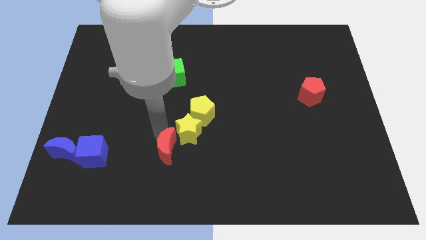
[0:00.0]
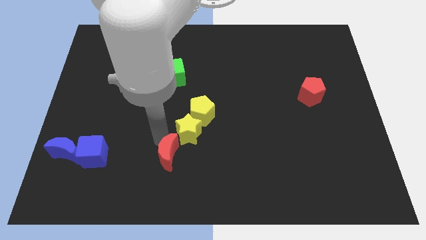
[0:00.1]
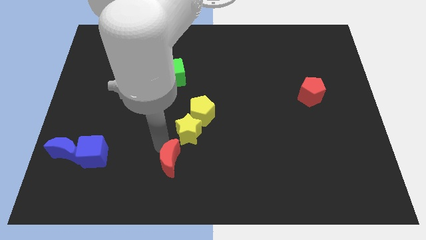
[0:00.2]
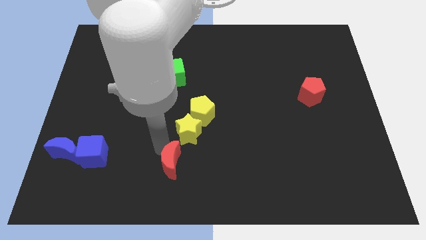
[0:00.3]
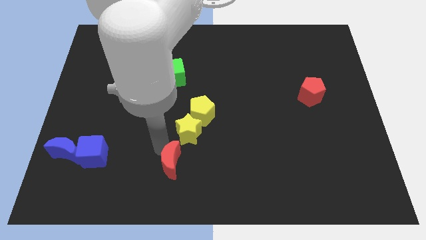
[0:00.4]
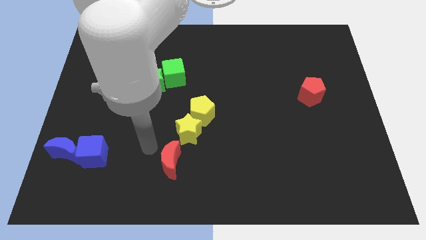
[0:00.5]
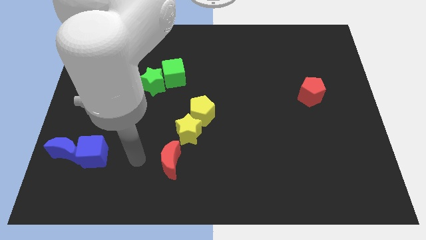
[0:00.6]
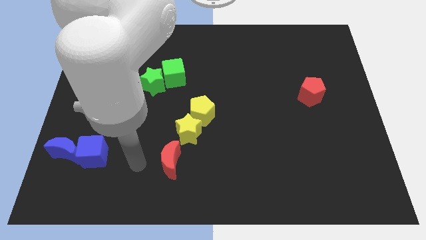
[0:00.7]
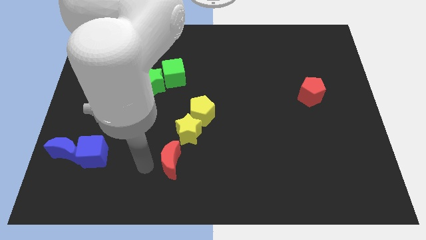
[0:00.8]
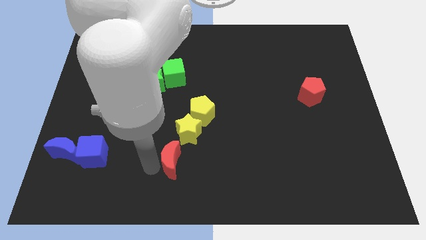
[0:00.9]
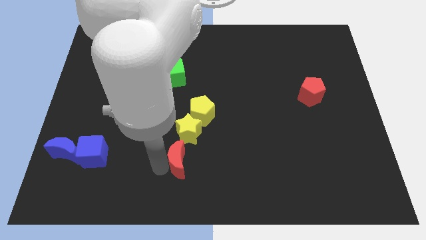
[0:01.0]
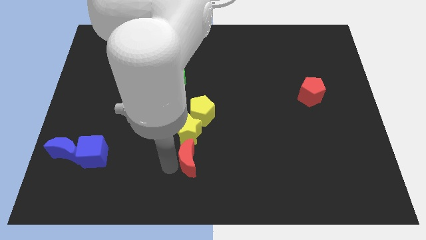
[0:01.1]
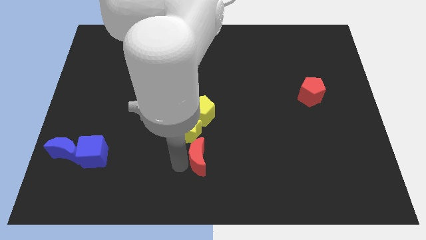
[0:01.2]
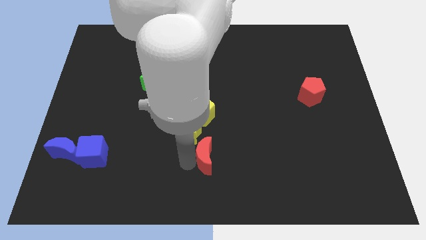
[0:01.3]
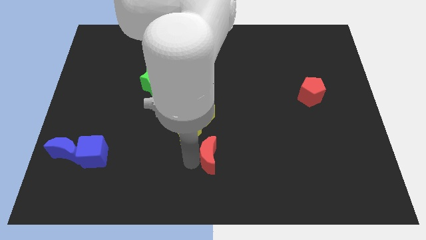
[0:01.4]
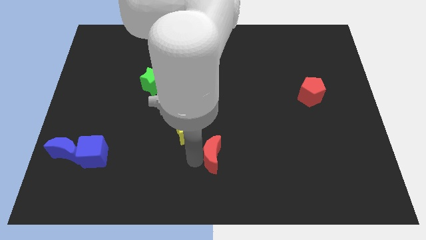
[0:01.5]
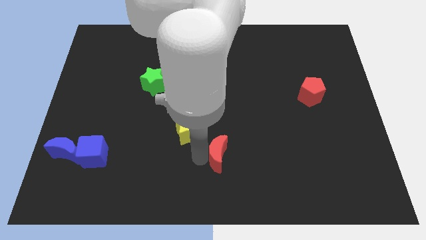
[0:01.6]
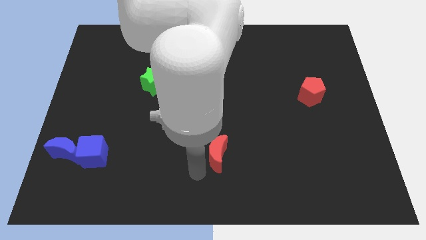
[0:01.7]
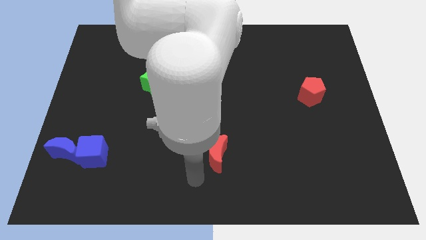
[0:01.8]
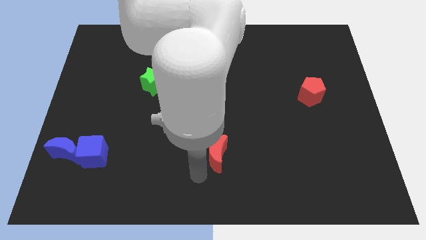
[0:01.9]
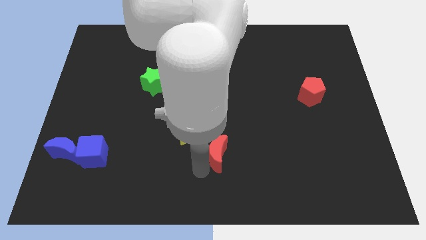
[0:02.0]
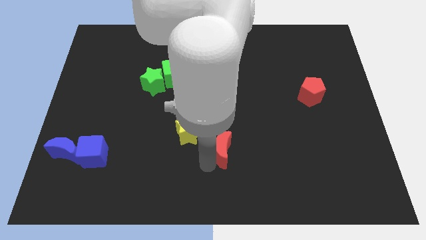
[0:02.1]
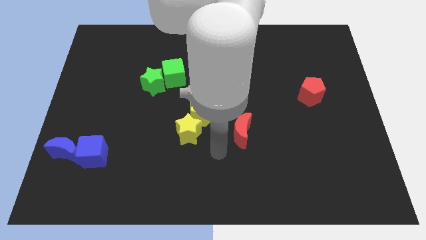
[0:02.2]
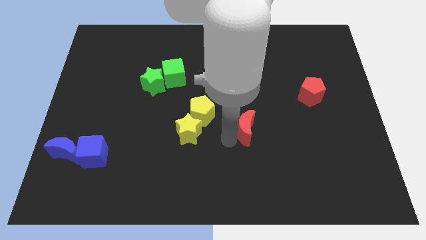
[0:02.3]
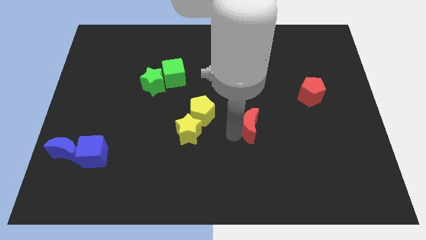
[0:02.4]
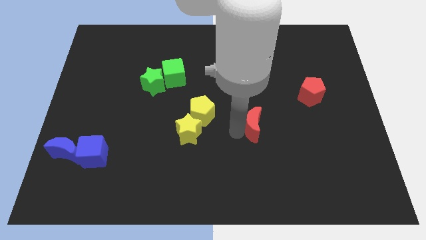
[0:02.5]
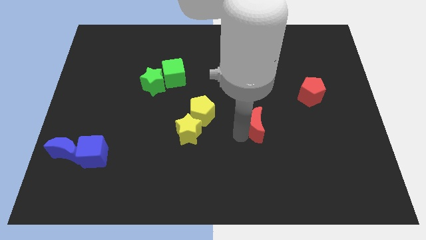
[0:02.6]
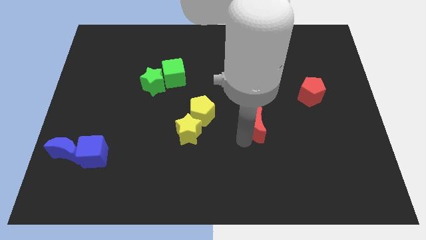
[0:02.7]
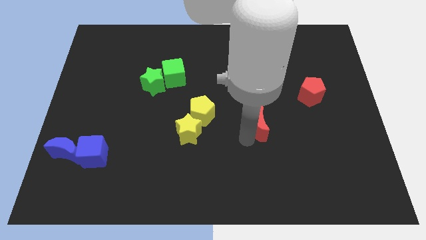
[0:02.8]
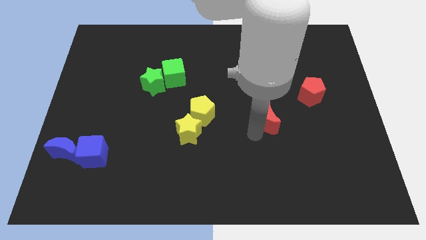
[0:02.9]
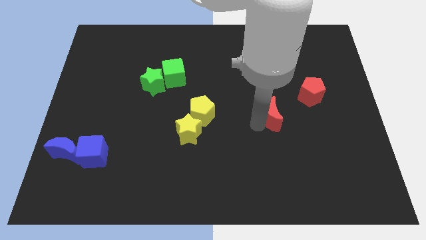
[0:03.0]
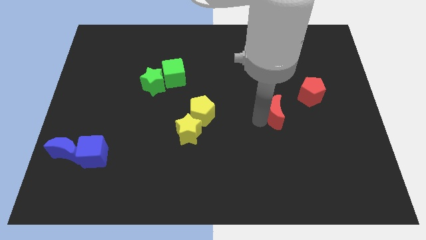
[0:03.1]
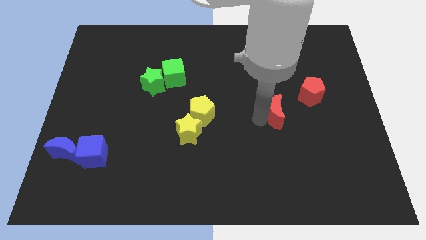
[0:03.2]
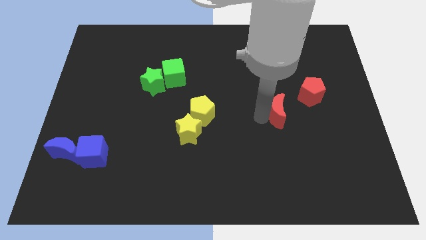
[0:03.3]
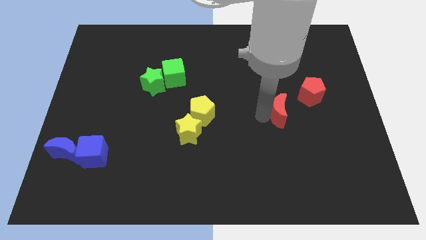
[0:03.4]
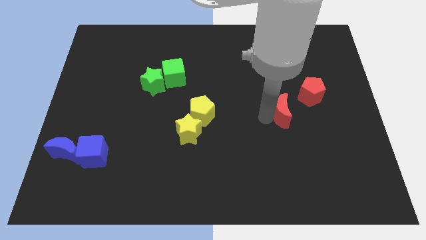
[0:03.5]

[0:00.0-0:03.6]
move the red moon towards the red pentagon

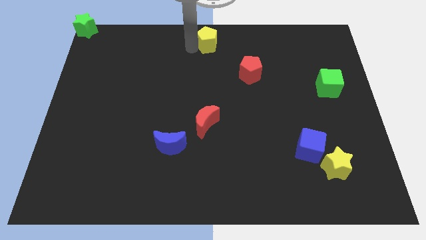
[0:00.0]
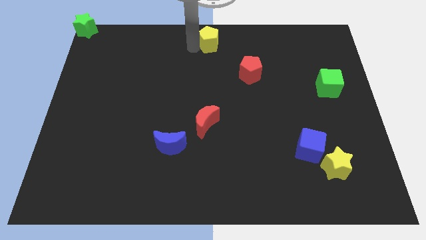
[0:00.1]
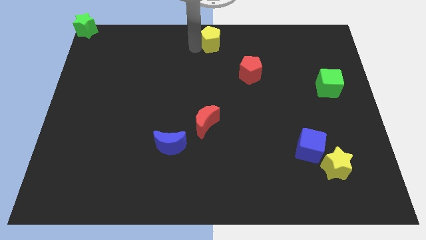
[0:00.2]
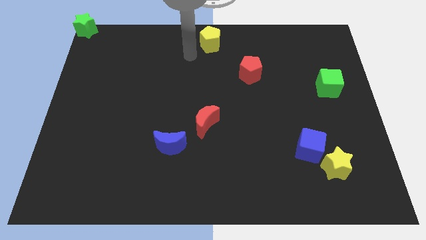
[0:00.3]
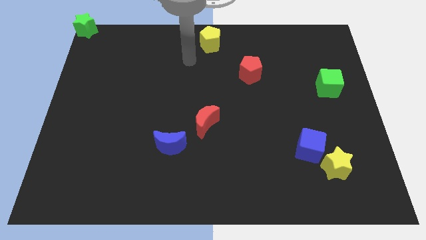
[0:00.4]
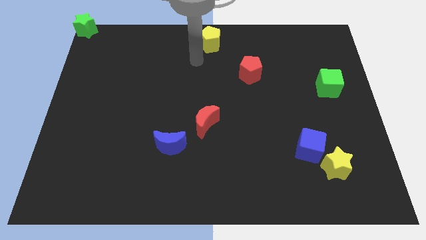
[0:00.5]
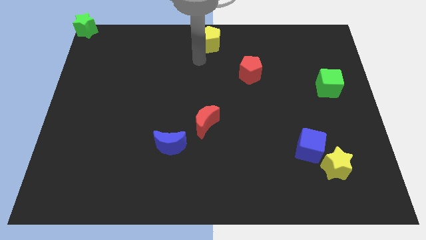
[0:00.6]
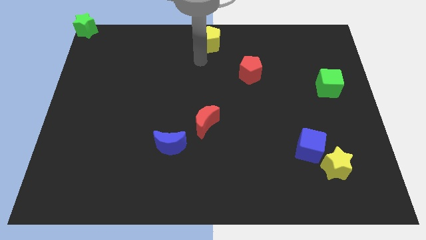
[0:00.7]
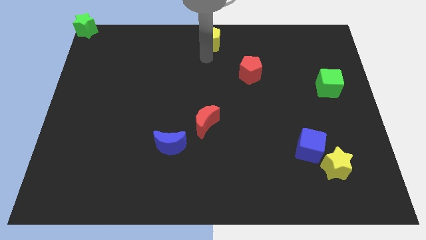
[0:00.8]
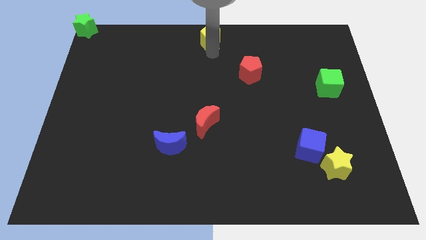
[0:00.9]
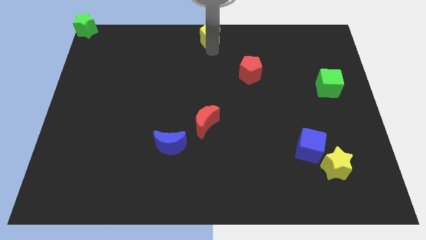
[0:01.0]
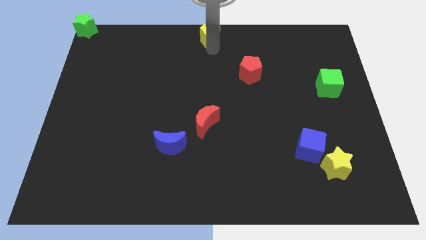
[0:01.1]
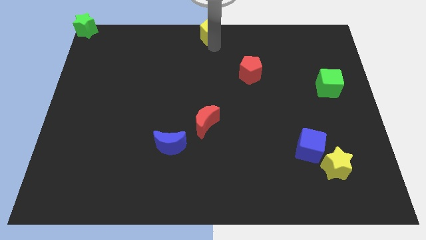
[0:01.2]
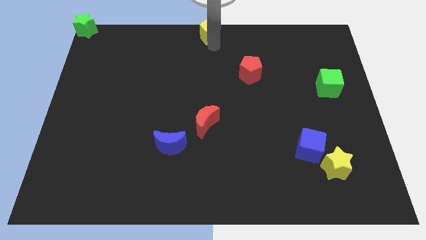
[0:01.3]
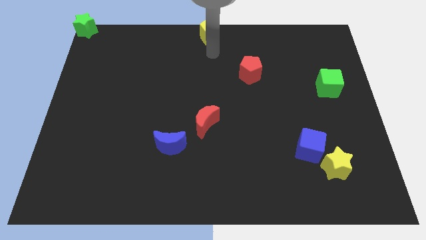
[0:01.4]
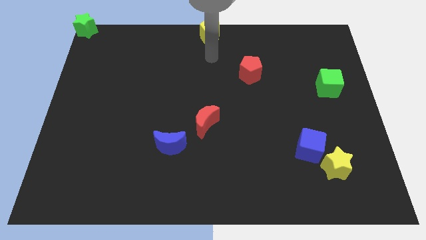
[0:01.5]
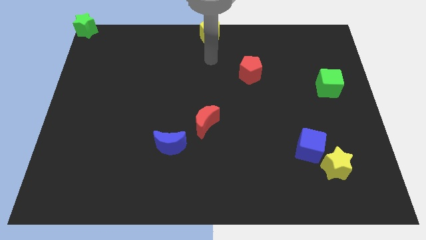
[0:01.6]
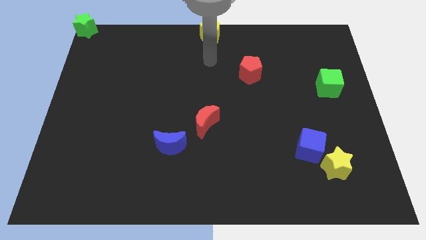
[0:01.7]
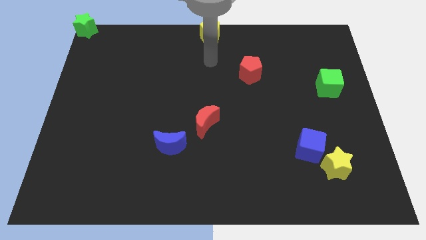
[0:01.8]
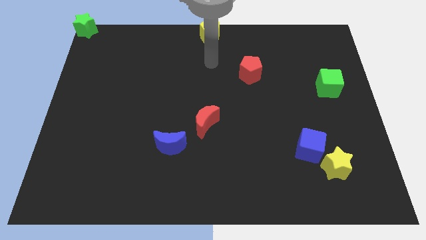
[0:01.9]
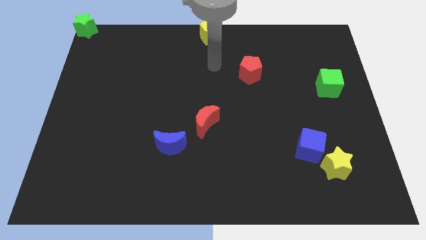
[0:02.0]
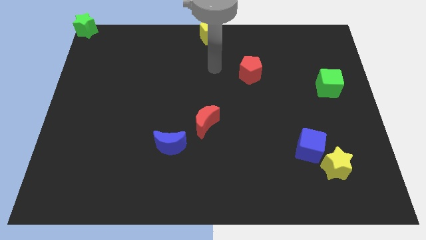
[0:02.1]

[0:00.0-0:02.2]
place your arm below yellow pentagon

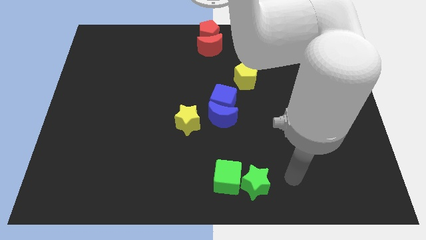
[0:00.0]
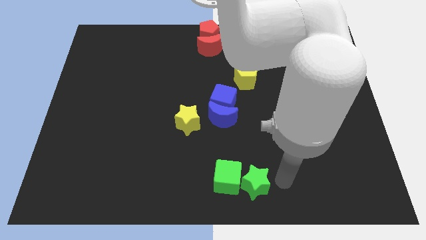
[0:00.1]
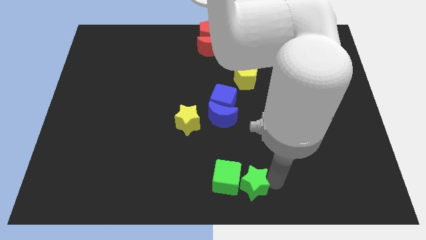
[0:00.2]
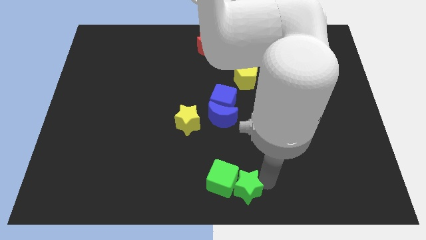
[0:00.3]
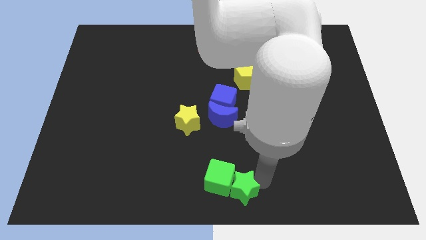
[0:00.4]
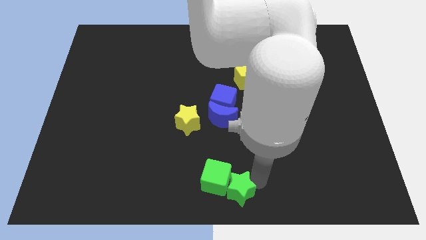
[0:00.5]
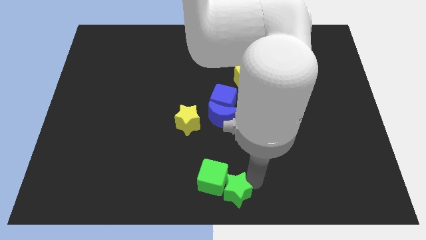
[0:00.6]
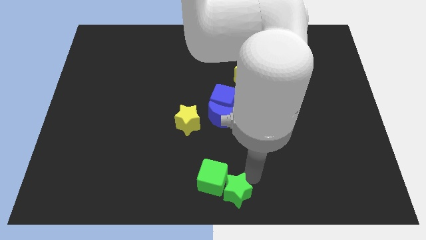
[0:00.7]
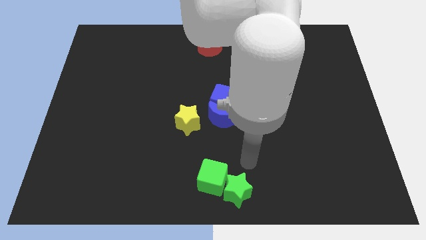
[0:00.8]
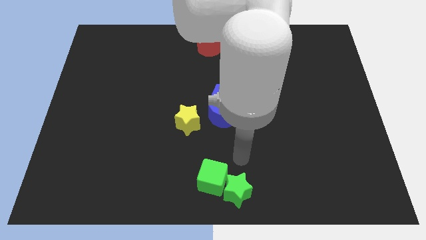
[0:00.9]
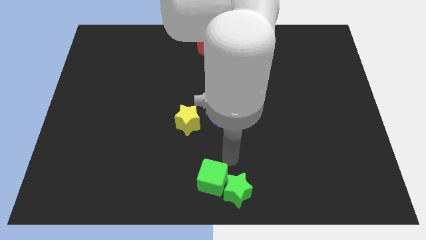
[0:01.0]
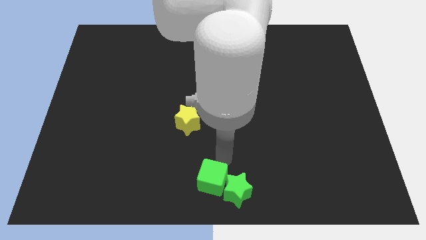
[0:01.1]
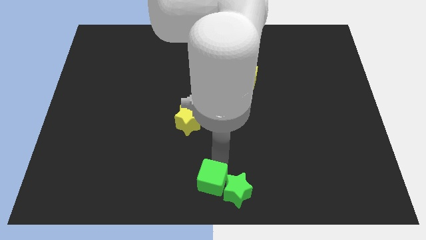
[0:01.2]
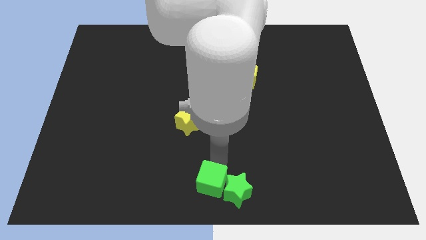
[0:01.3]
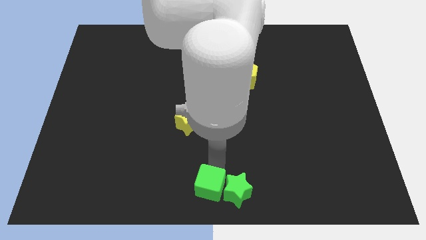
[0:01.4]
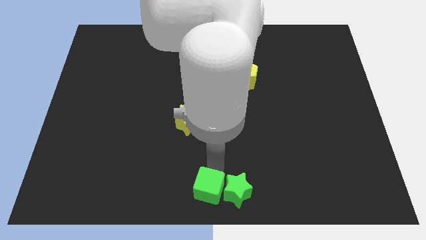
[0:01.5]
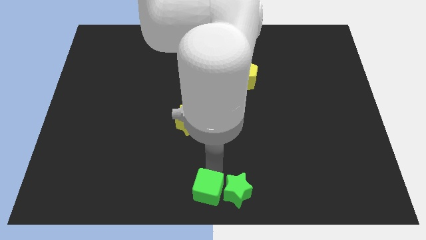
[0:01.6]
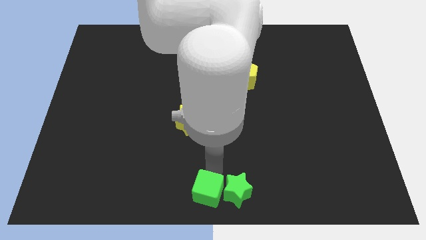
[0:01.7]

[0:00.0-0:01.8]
push the green star and green cube towards the bottom center side of the board

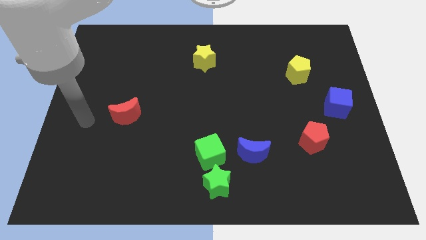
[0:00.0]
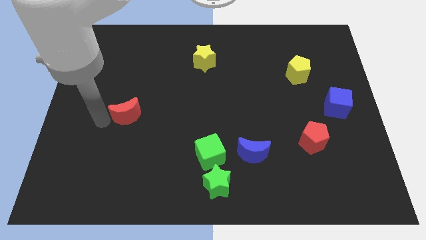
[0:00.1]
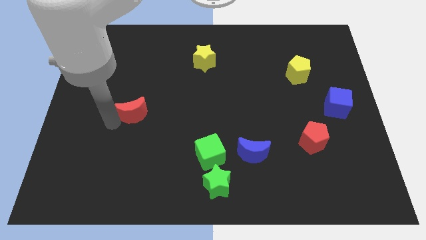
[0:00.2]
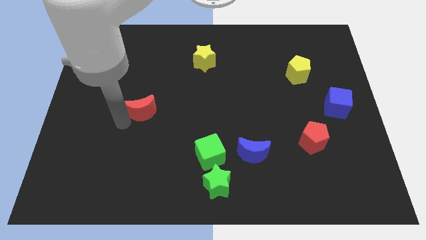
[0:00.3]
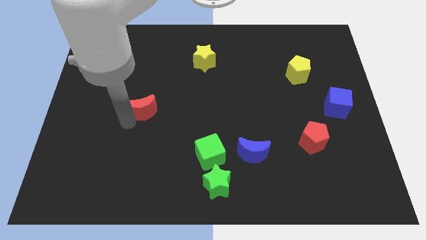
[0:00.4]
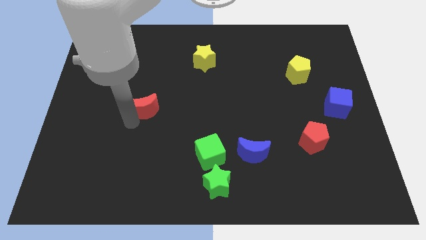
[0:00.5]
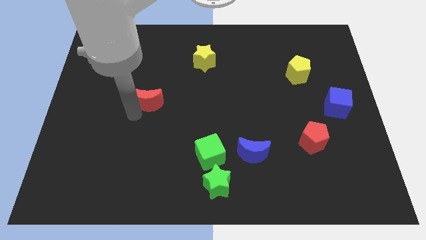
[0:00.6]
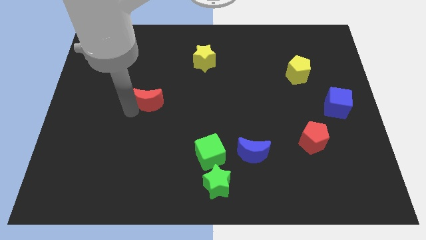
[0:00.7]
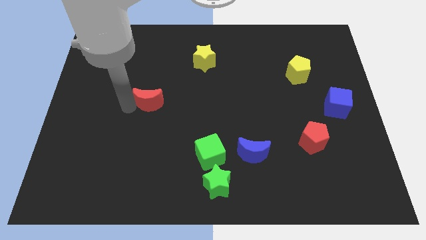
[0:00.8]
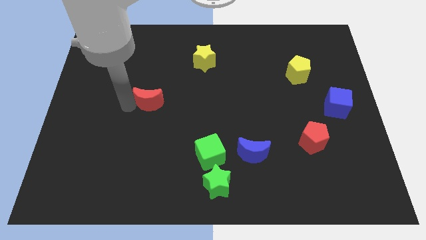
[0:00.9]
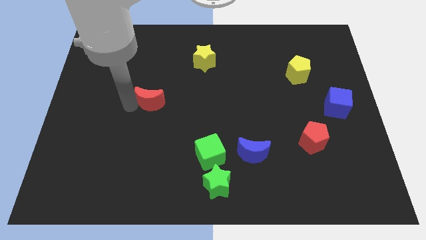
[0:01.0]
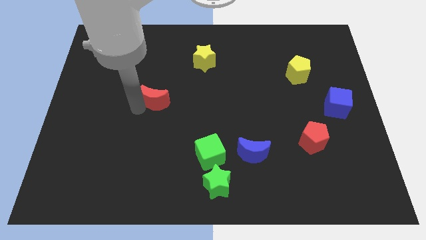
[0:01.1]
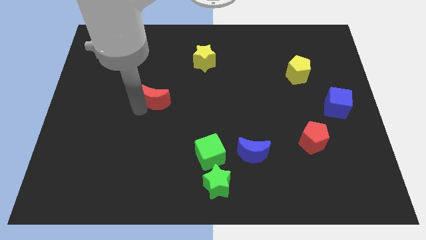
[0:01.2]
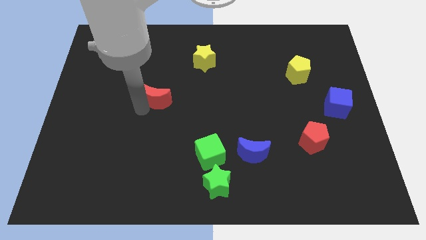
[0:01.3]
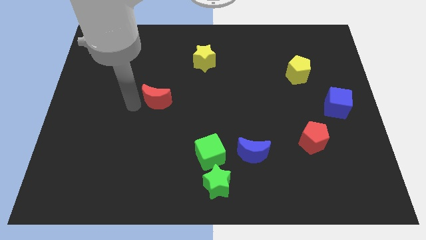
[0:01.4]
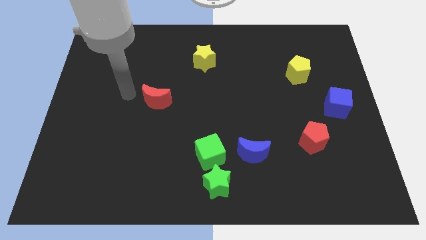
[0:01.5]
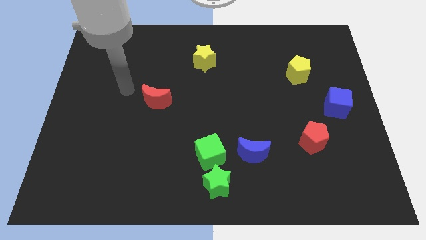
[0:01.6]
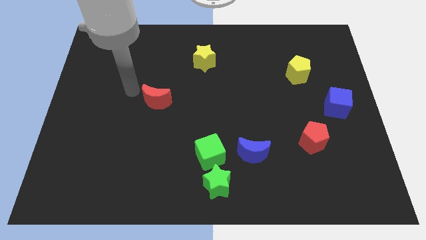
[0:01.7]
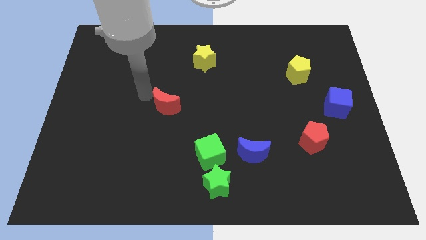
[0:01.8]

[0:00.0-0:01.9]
place the red crescent diagonally below the yellow star
